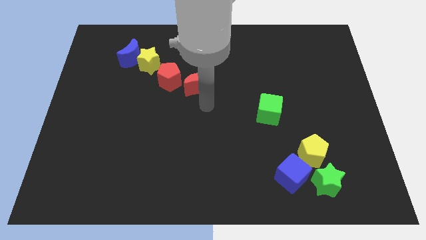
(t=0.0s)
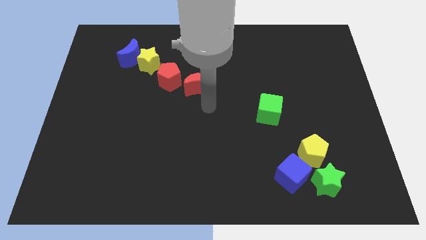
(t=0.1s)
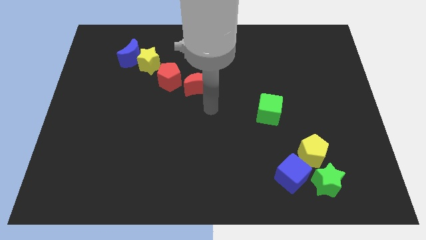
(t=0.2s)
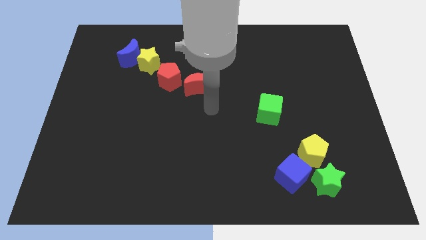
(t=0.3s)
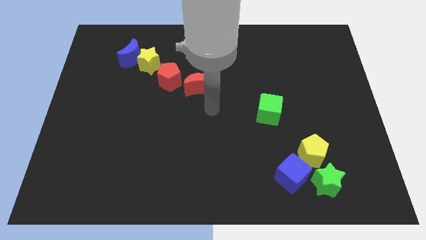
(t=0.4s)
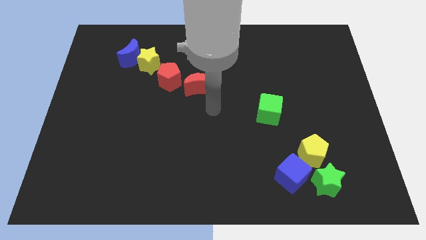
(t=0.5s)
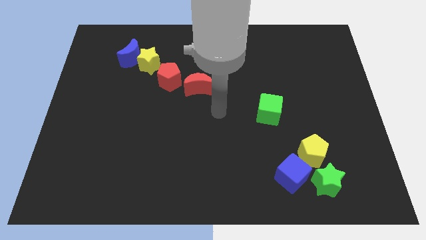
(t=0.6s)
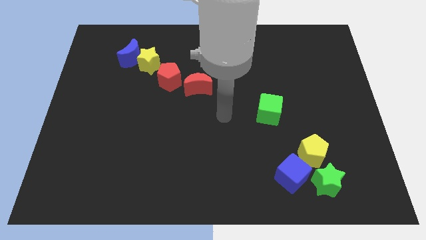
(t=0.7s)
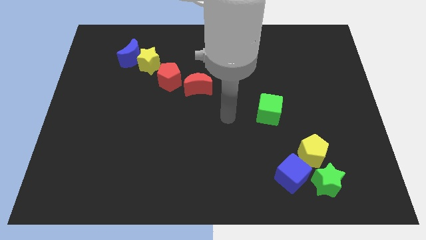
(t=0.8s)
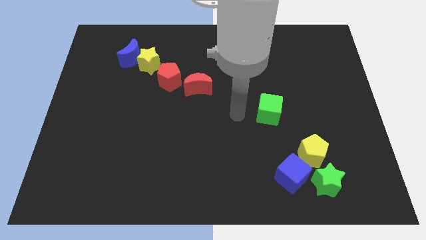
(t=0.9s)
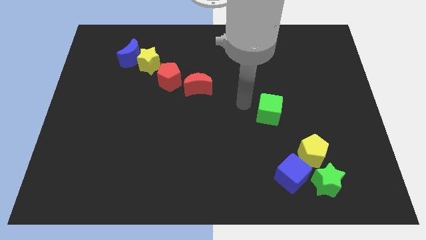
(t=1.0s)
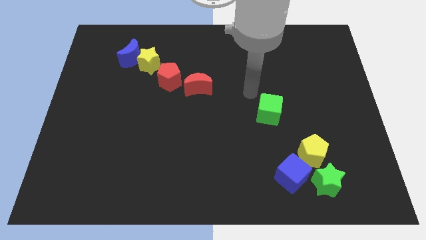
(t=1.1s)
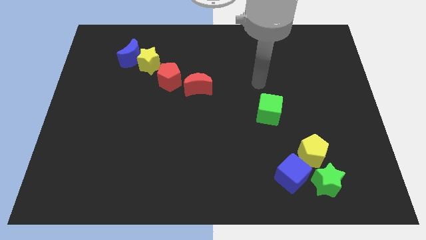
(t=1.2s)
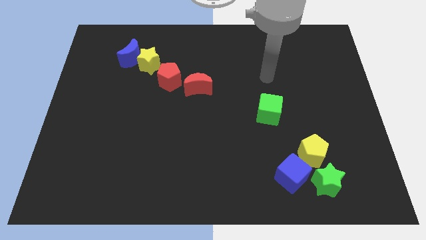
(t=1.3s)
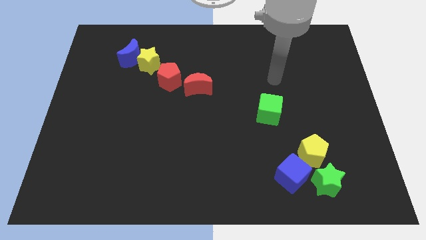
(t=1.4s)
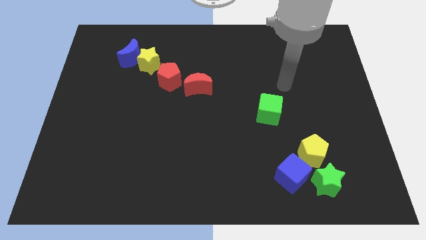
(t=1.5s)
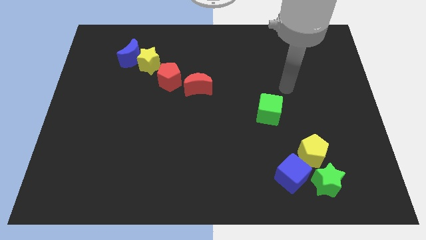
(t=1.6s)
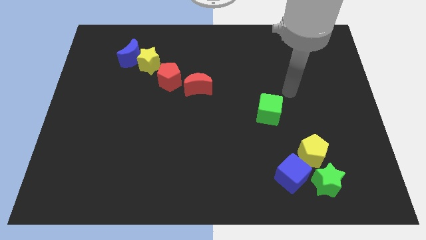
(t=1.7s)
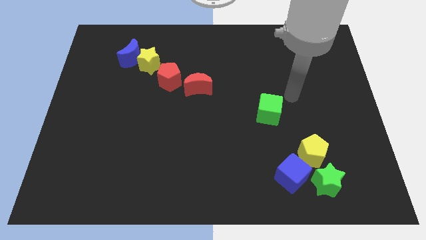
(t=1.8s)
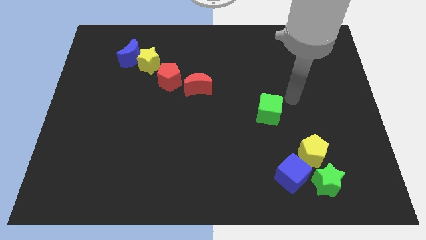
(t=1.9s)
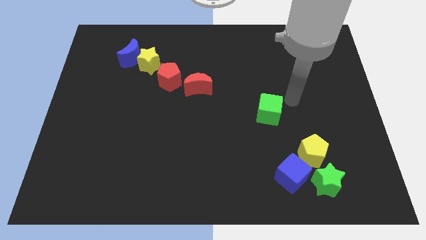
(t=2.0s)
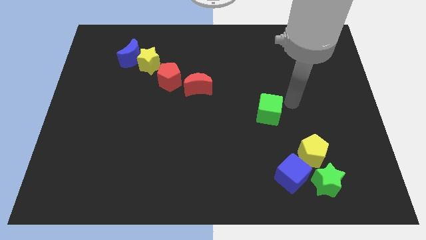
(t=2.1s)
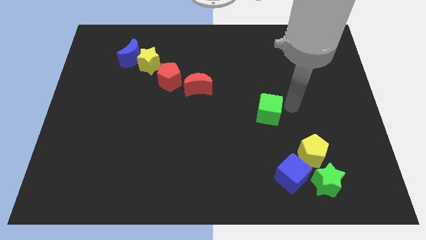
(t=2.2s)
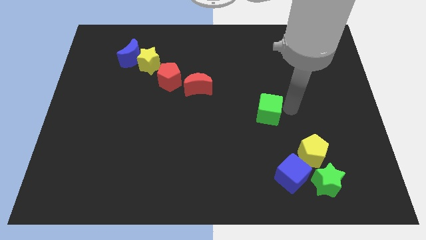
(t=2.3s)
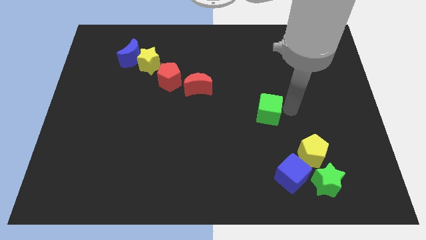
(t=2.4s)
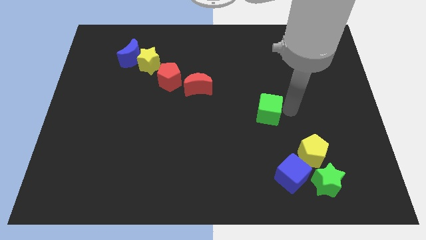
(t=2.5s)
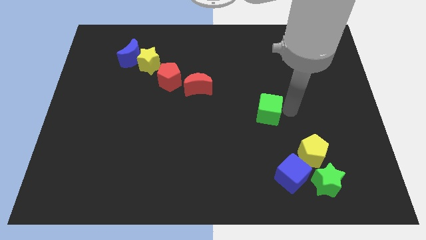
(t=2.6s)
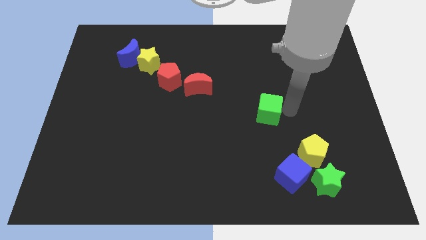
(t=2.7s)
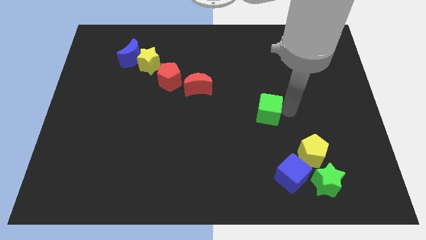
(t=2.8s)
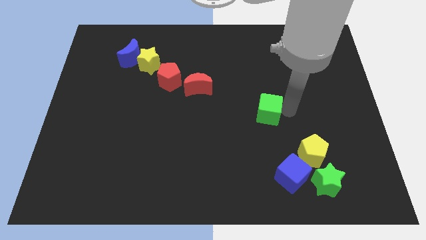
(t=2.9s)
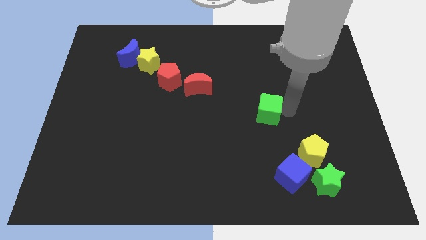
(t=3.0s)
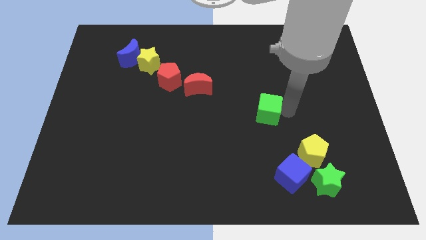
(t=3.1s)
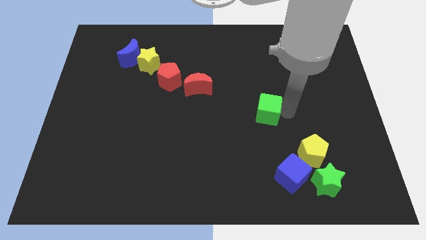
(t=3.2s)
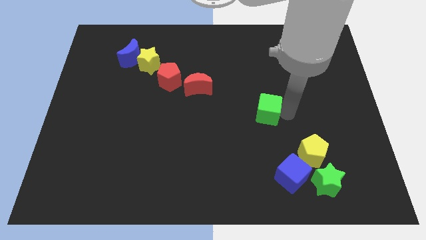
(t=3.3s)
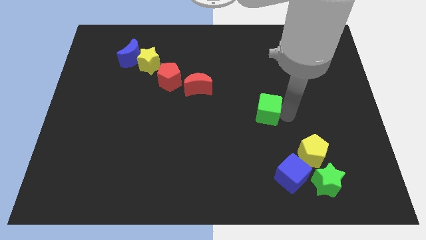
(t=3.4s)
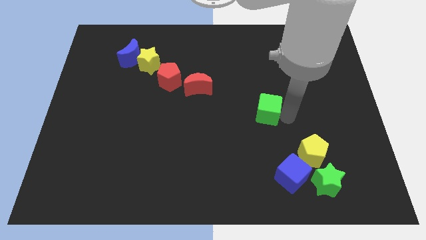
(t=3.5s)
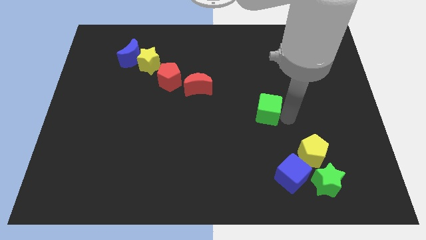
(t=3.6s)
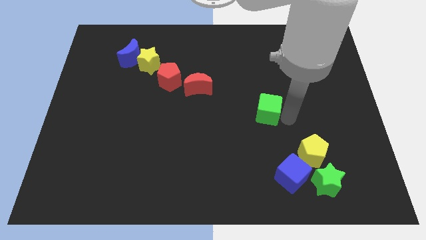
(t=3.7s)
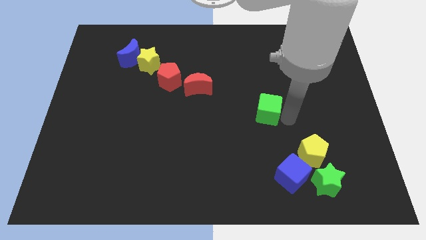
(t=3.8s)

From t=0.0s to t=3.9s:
point your hand to the right of the green cube

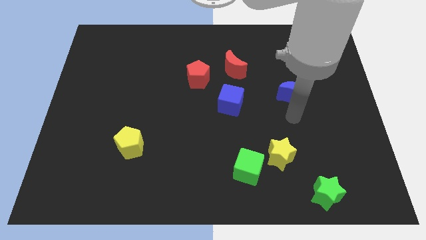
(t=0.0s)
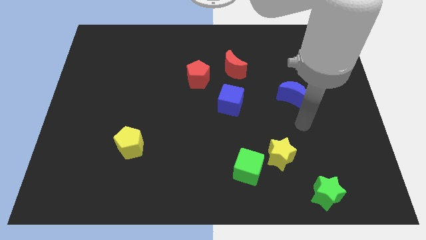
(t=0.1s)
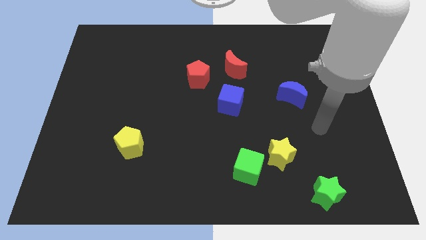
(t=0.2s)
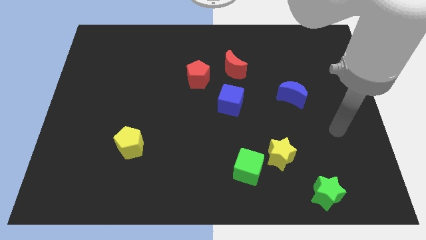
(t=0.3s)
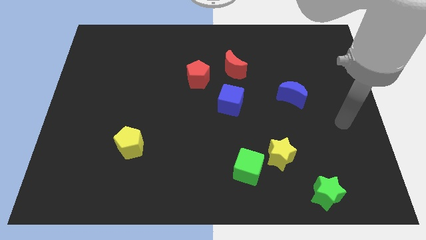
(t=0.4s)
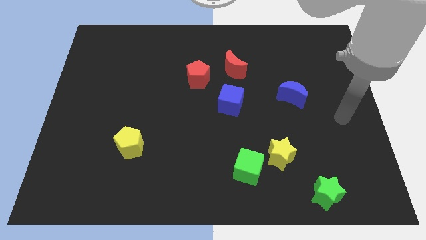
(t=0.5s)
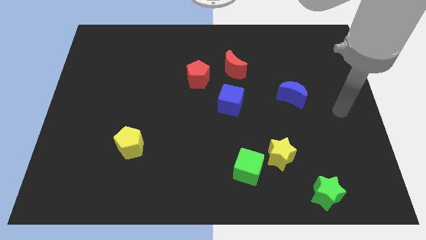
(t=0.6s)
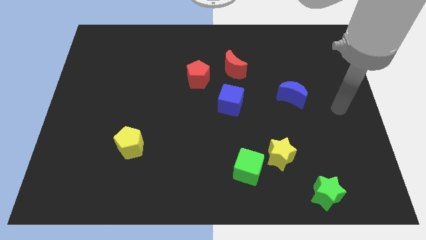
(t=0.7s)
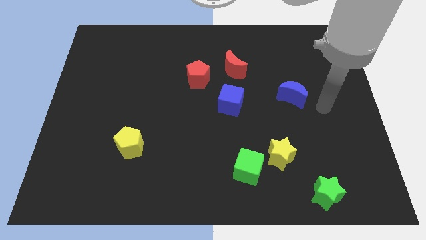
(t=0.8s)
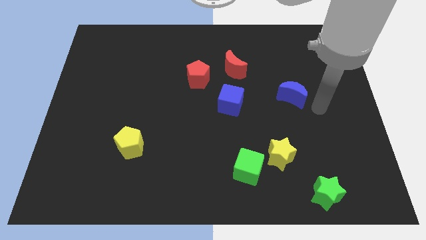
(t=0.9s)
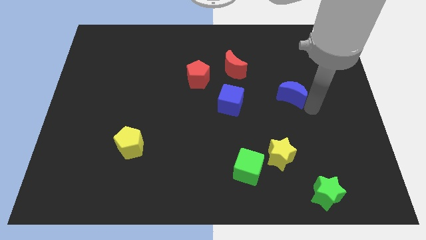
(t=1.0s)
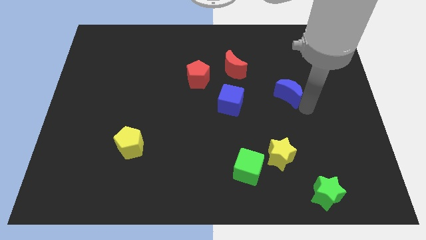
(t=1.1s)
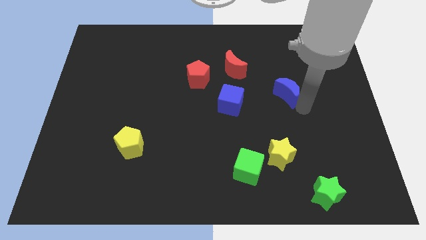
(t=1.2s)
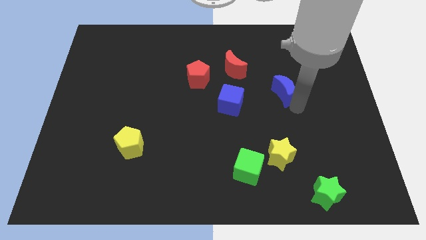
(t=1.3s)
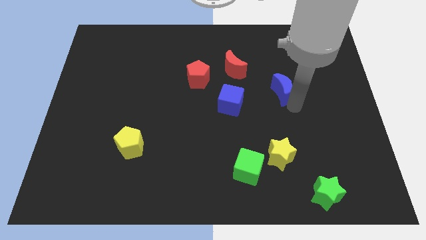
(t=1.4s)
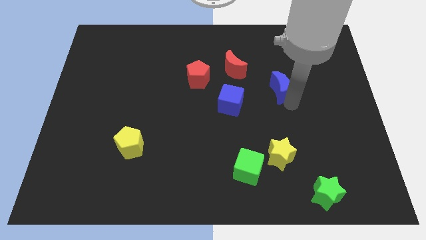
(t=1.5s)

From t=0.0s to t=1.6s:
move the blue crescent slightly on top of the board

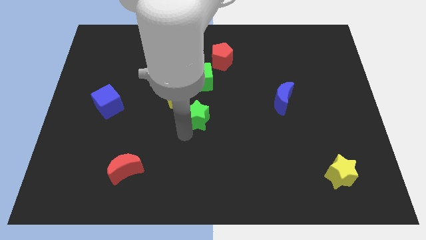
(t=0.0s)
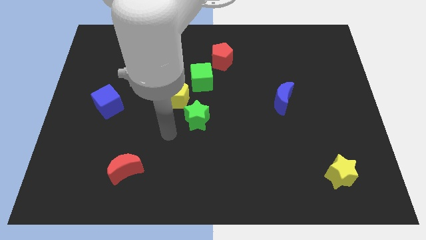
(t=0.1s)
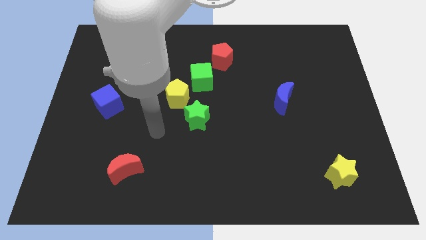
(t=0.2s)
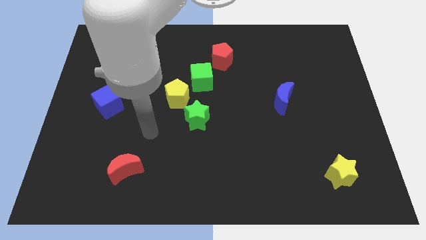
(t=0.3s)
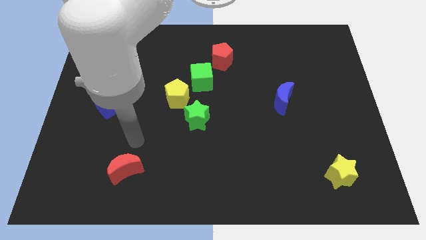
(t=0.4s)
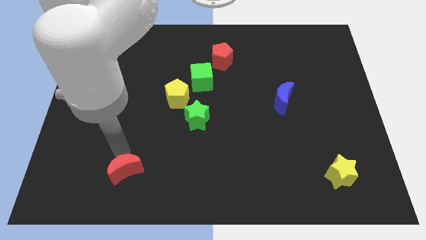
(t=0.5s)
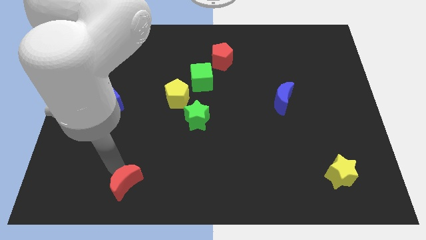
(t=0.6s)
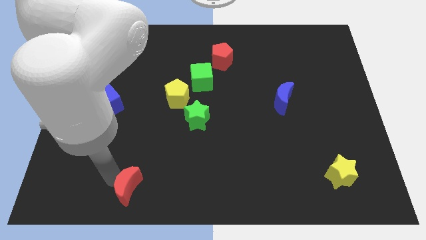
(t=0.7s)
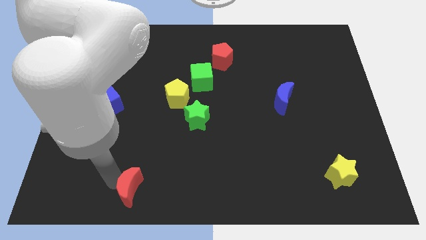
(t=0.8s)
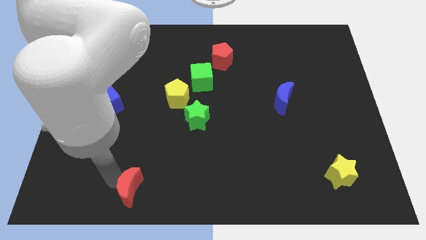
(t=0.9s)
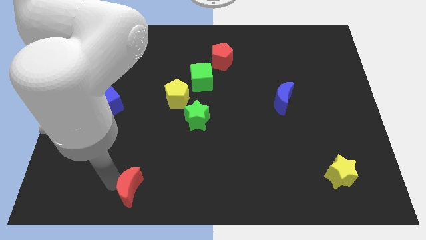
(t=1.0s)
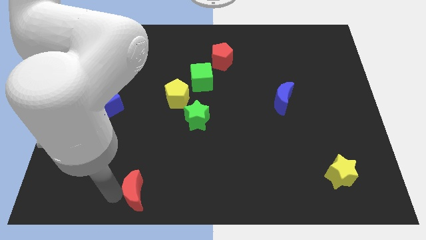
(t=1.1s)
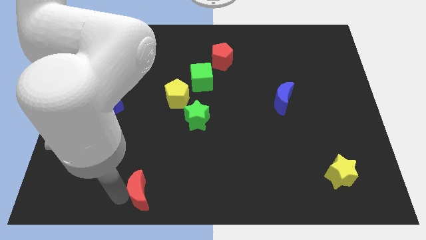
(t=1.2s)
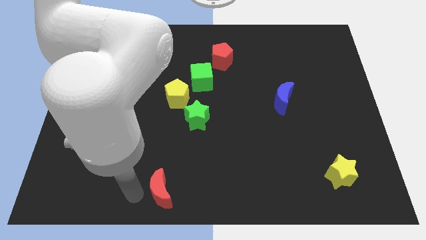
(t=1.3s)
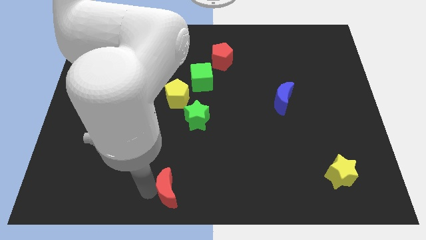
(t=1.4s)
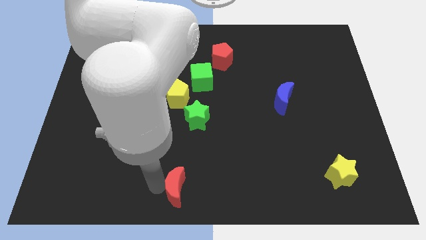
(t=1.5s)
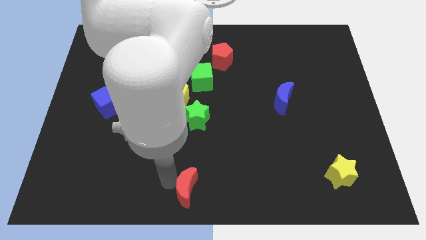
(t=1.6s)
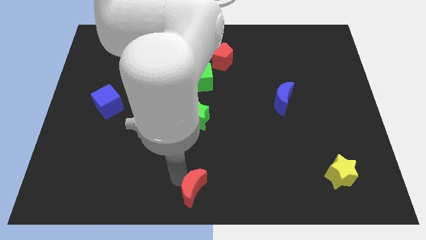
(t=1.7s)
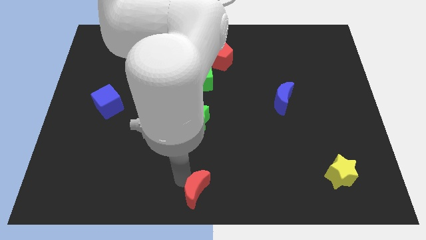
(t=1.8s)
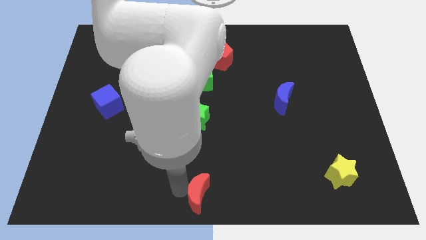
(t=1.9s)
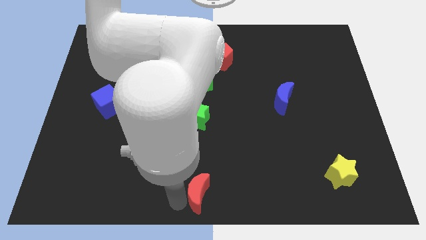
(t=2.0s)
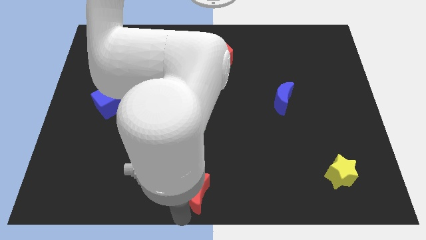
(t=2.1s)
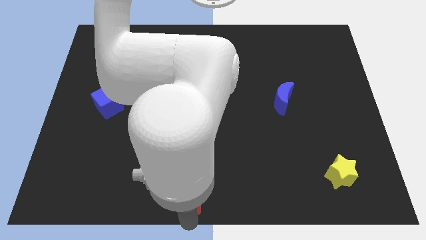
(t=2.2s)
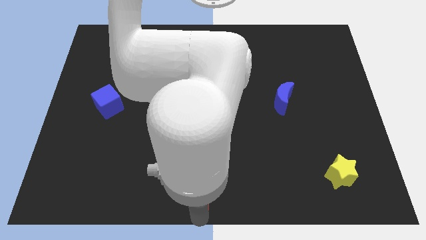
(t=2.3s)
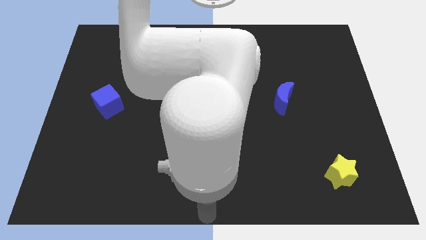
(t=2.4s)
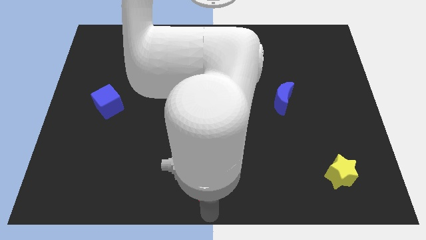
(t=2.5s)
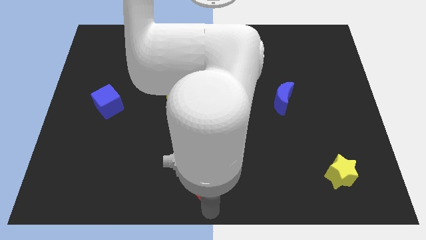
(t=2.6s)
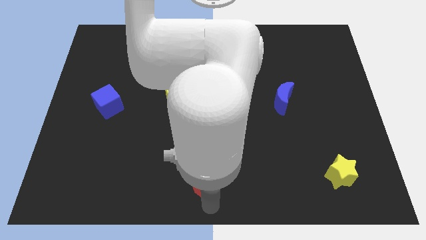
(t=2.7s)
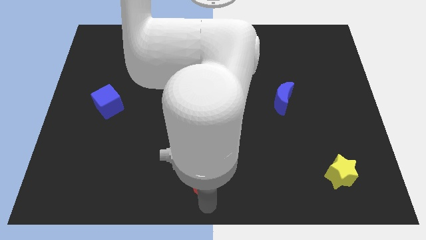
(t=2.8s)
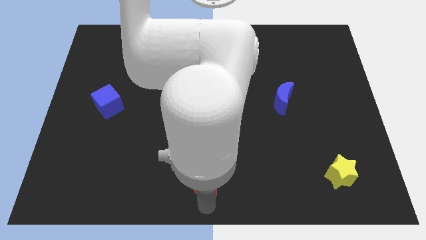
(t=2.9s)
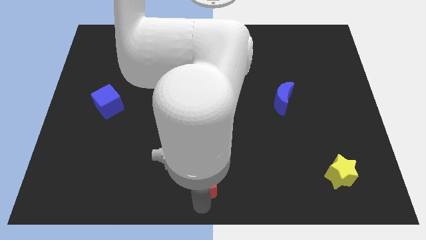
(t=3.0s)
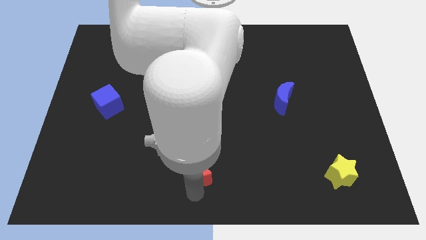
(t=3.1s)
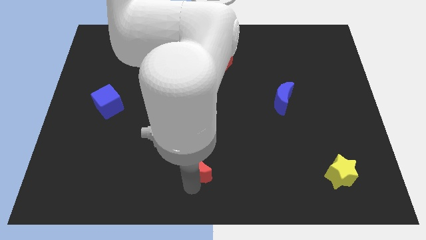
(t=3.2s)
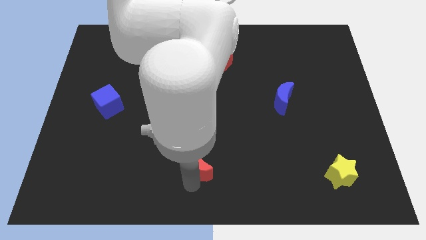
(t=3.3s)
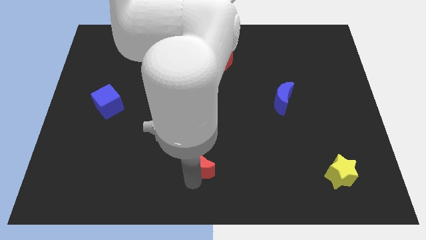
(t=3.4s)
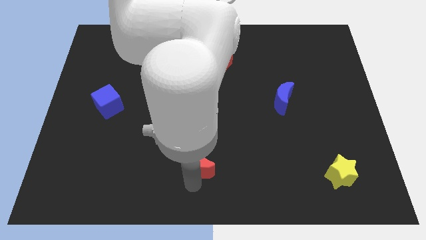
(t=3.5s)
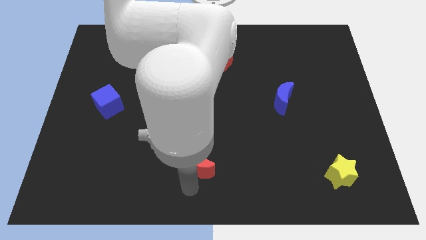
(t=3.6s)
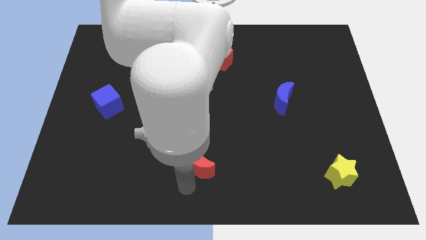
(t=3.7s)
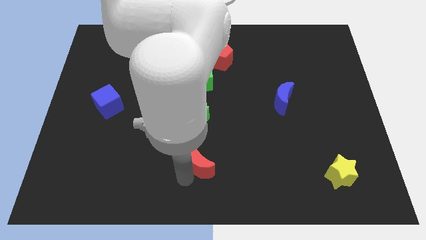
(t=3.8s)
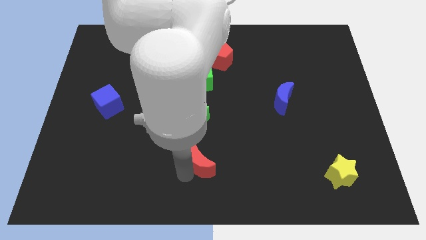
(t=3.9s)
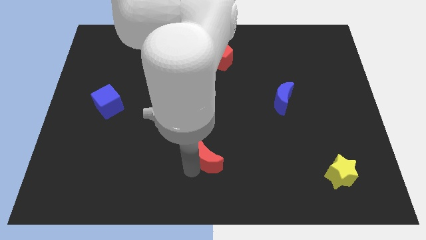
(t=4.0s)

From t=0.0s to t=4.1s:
move red moon below green star
